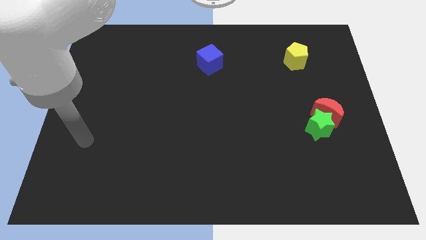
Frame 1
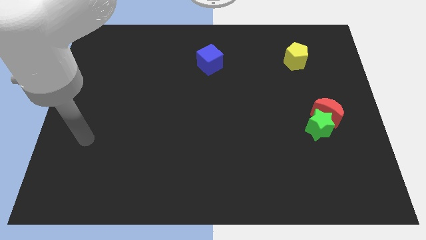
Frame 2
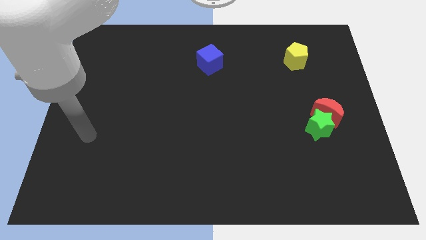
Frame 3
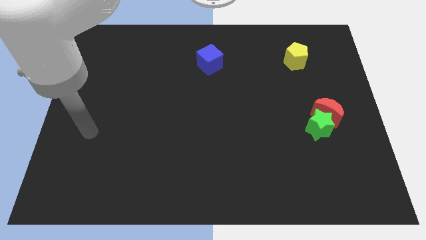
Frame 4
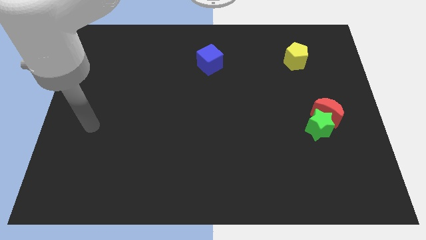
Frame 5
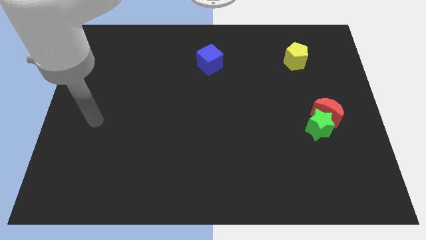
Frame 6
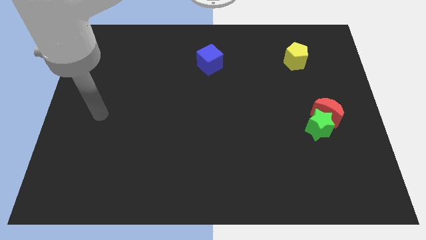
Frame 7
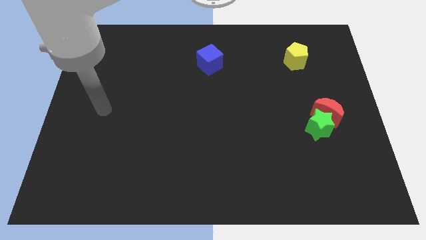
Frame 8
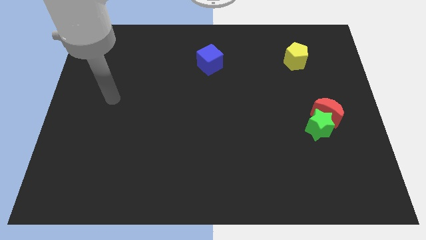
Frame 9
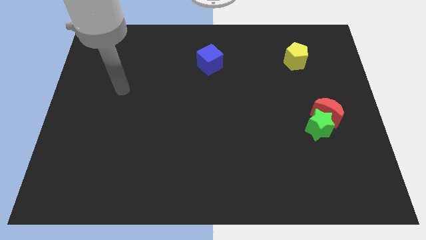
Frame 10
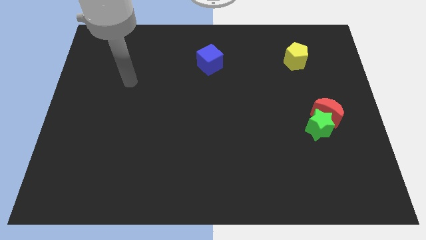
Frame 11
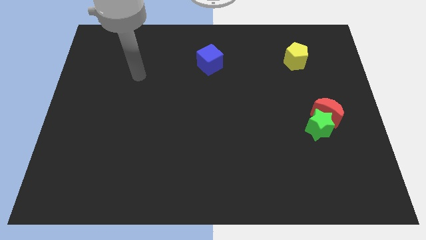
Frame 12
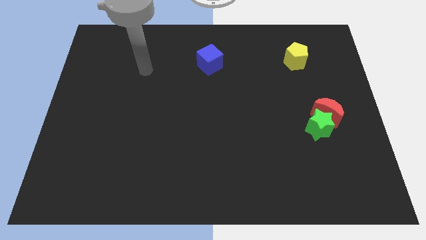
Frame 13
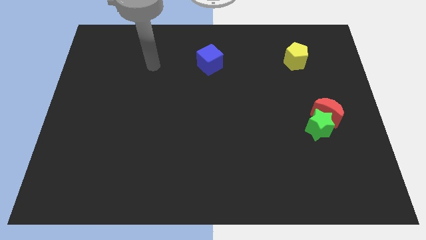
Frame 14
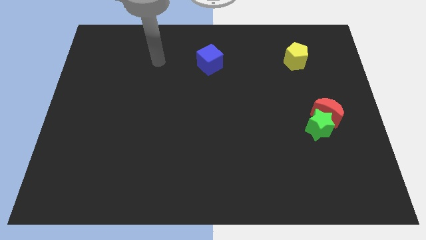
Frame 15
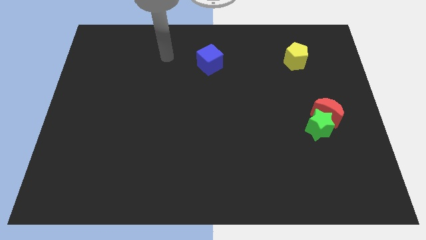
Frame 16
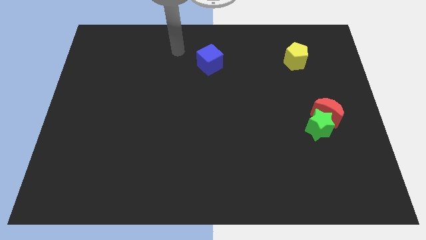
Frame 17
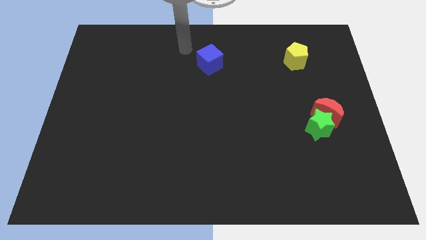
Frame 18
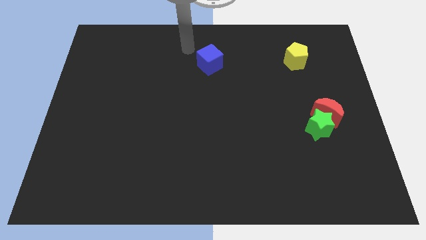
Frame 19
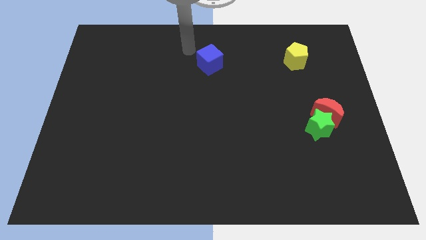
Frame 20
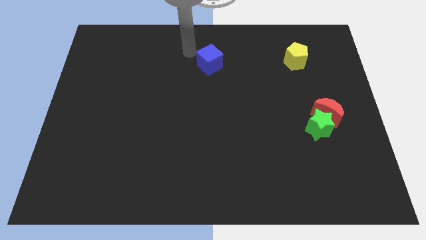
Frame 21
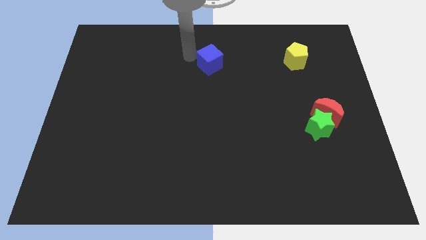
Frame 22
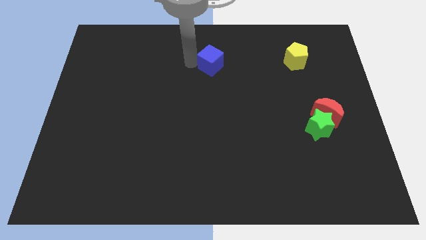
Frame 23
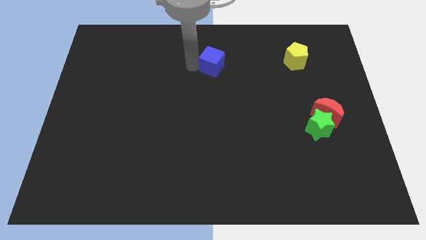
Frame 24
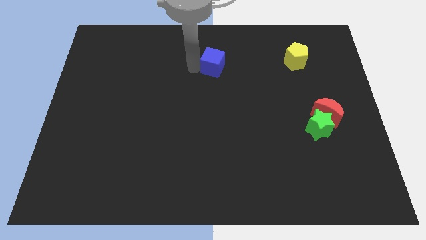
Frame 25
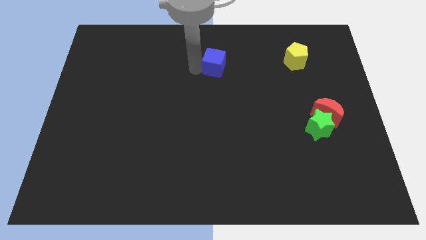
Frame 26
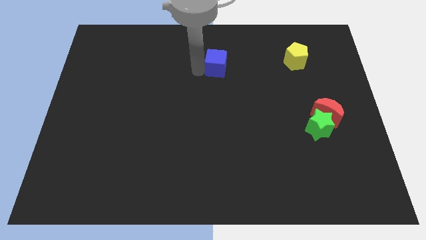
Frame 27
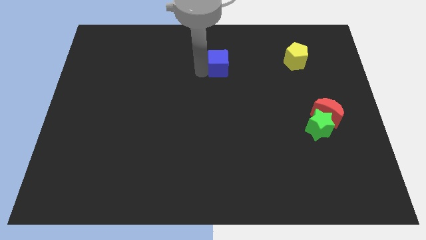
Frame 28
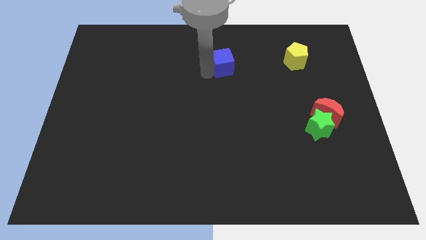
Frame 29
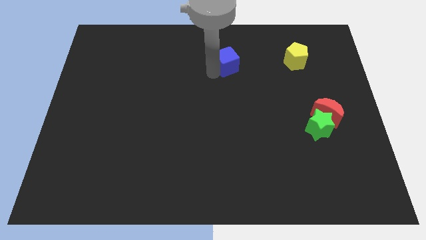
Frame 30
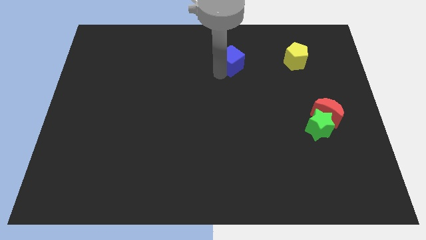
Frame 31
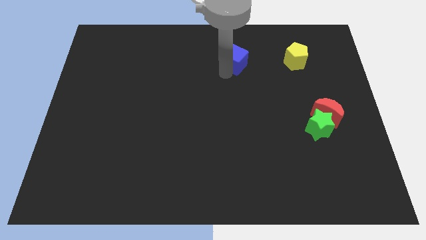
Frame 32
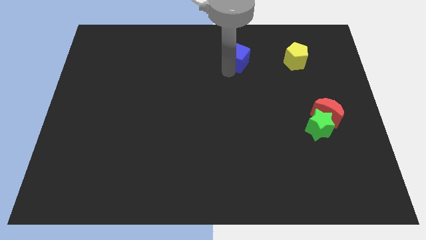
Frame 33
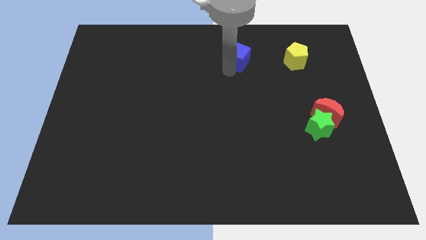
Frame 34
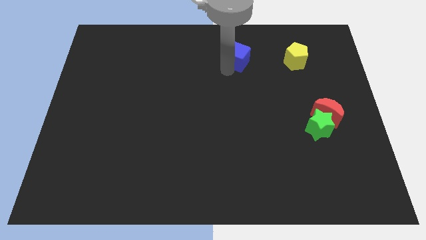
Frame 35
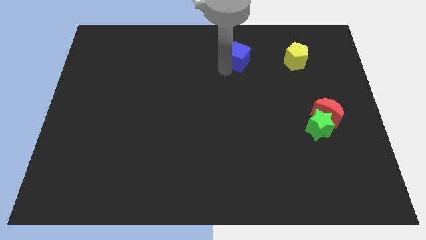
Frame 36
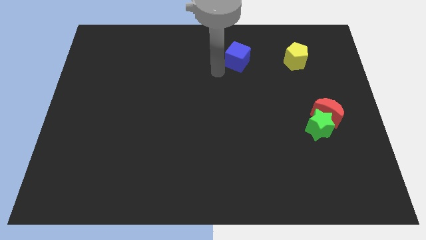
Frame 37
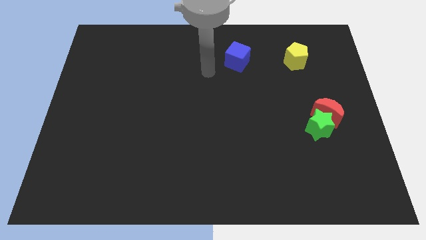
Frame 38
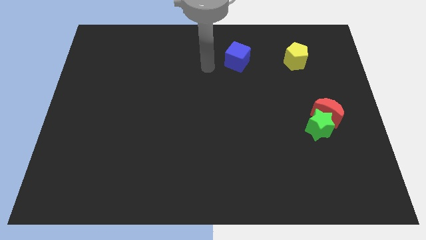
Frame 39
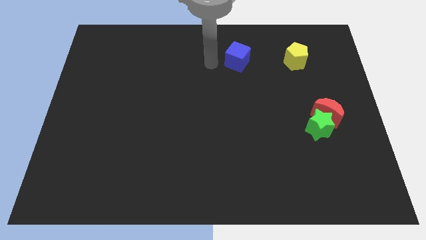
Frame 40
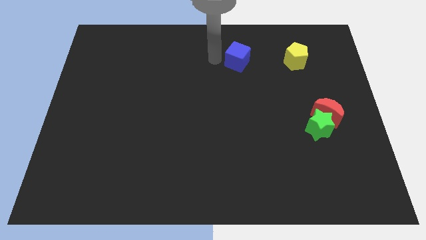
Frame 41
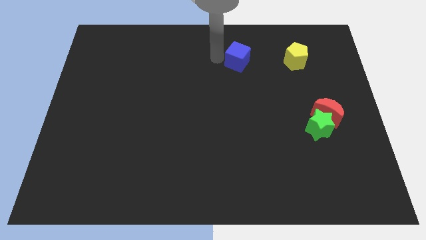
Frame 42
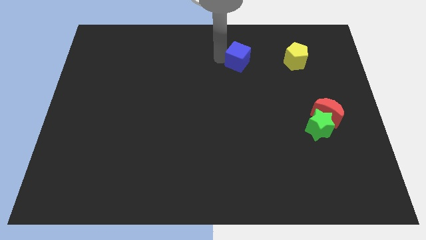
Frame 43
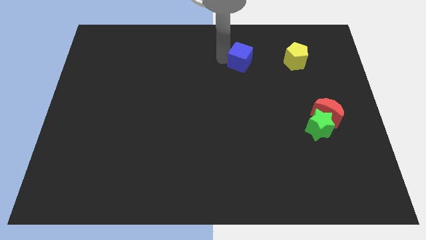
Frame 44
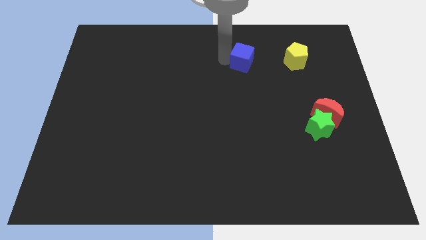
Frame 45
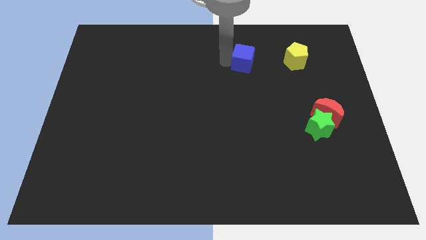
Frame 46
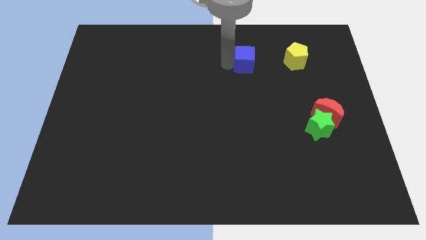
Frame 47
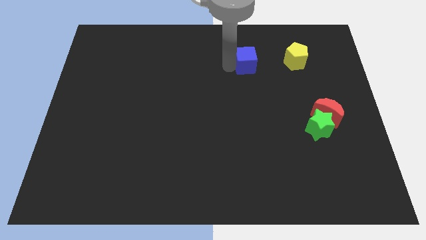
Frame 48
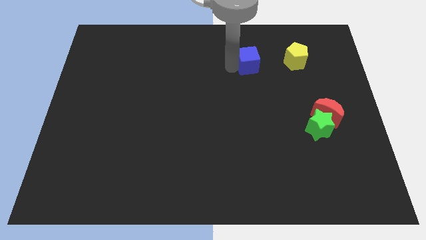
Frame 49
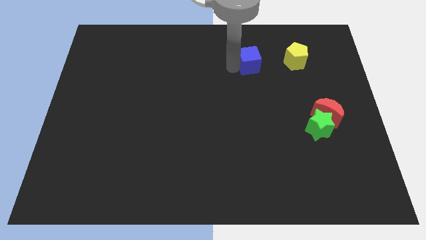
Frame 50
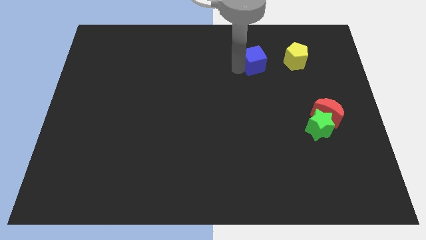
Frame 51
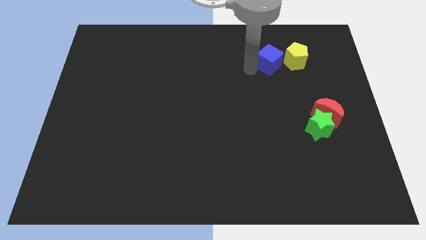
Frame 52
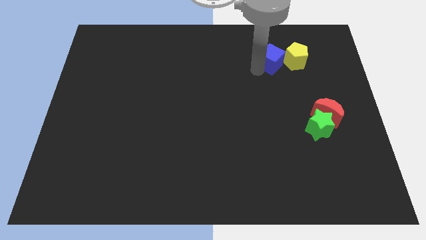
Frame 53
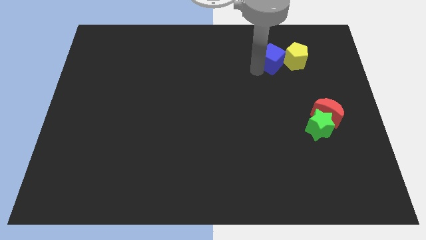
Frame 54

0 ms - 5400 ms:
push the cube next to the yellow pentagon

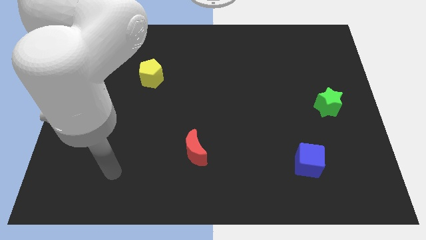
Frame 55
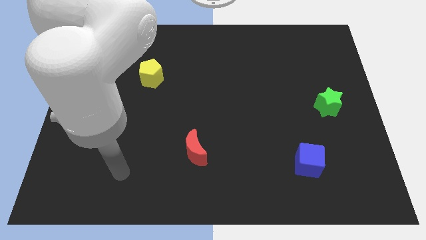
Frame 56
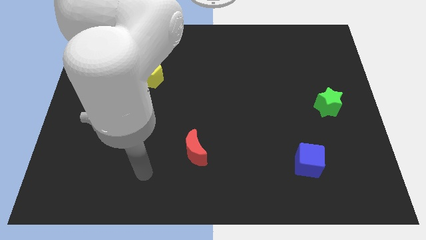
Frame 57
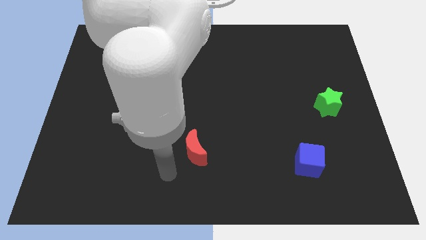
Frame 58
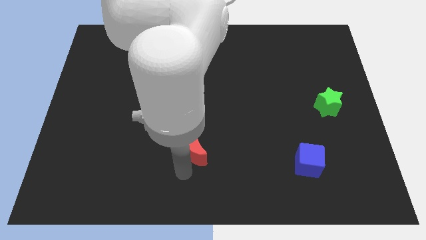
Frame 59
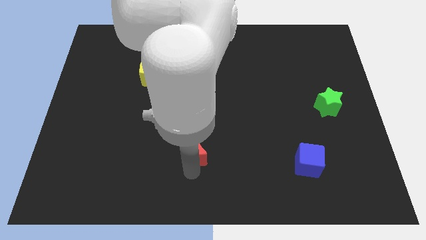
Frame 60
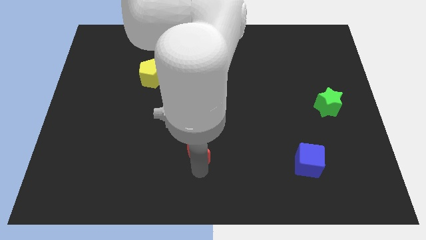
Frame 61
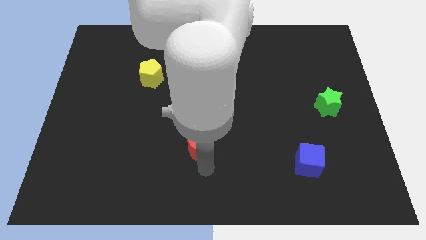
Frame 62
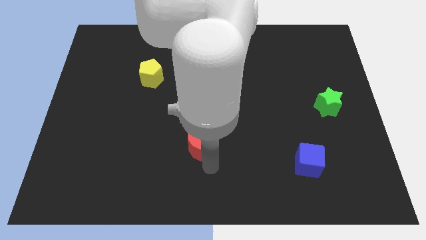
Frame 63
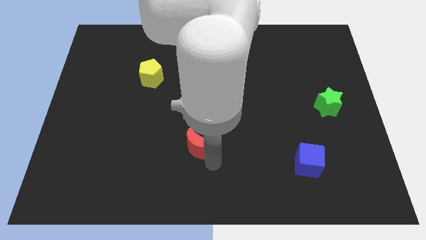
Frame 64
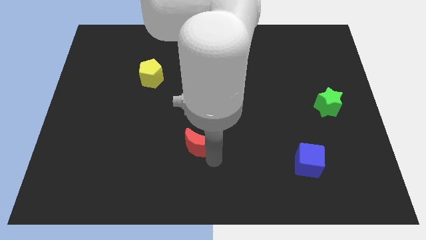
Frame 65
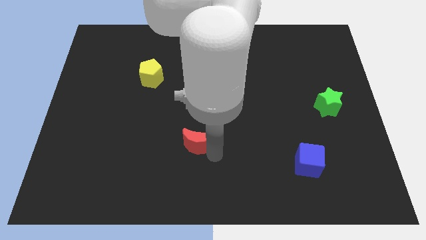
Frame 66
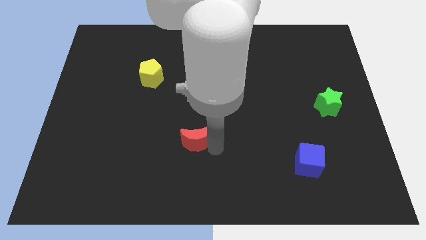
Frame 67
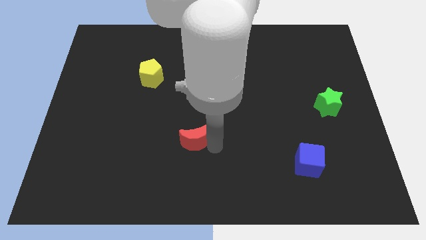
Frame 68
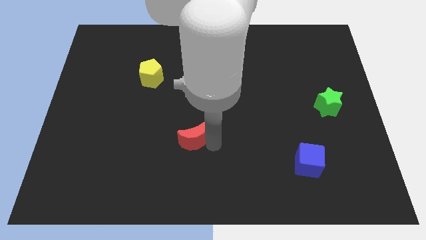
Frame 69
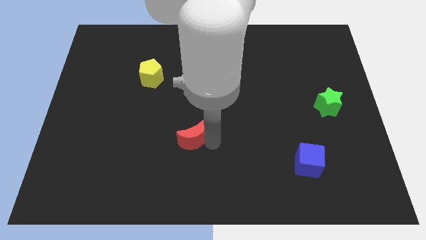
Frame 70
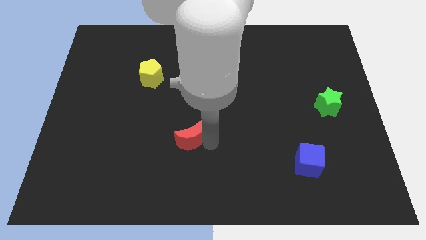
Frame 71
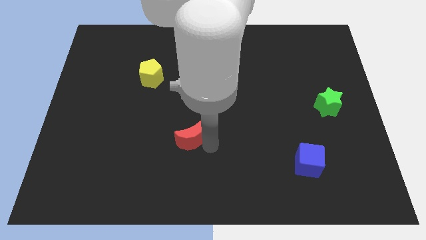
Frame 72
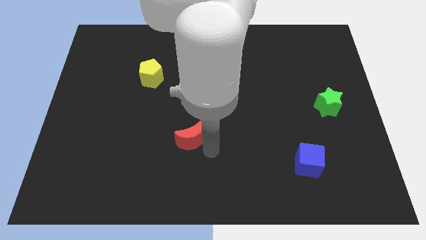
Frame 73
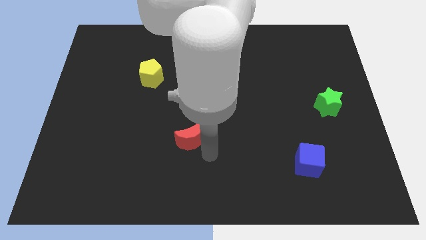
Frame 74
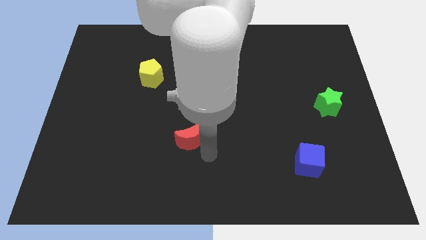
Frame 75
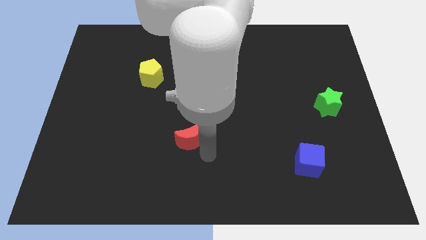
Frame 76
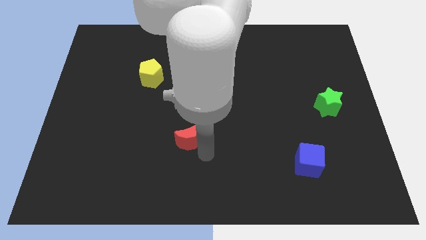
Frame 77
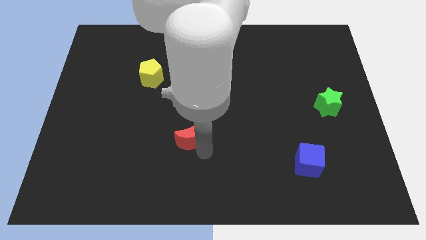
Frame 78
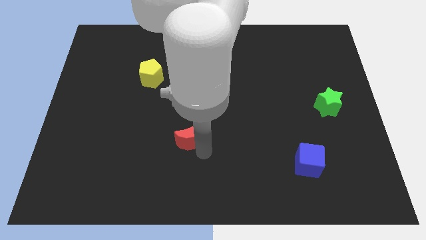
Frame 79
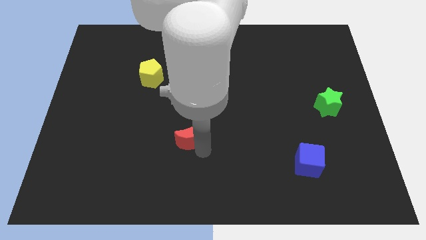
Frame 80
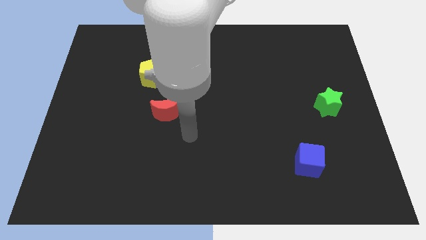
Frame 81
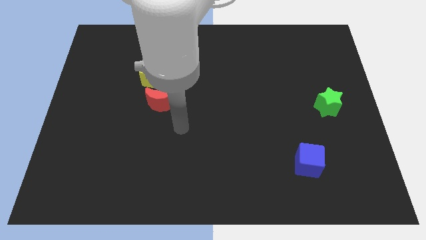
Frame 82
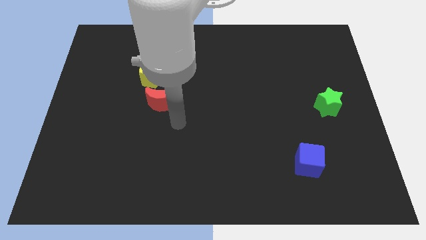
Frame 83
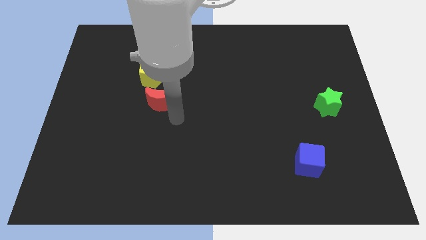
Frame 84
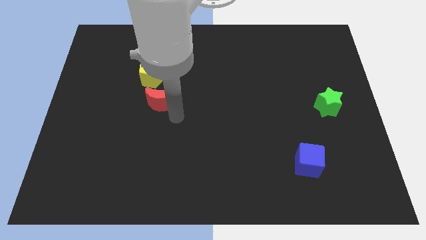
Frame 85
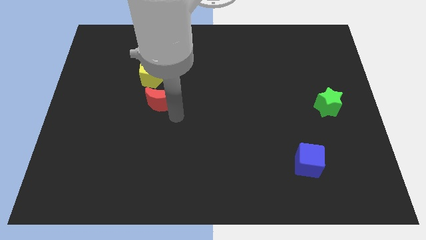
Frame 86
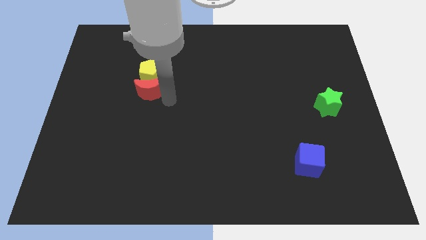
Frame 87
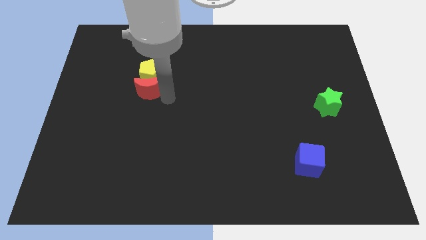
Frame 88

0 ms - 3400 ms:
move the red block close to the yellow block
